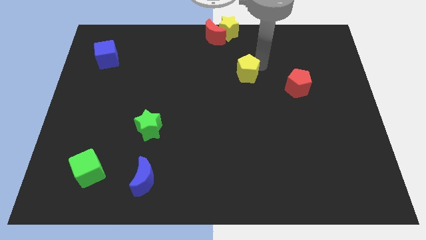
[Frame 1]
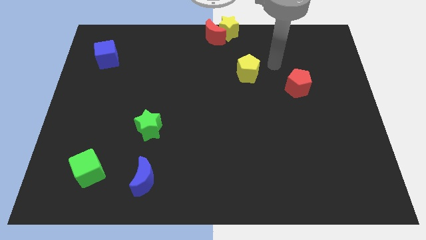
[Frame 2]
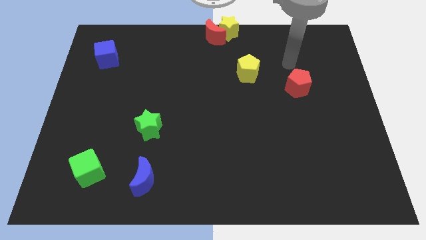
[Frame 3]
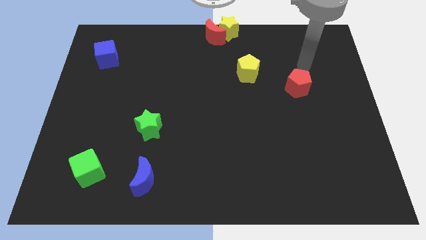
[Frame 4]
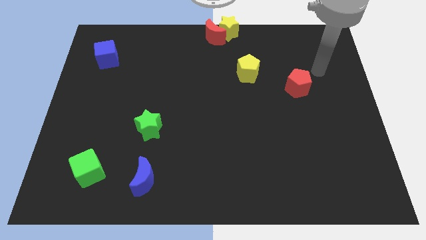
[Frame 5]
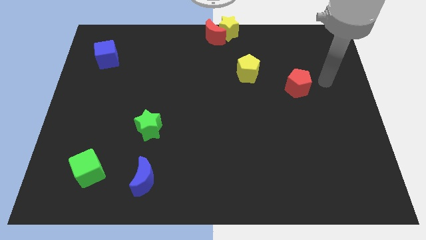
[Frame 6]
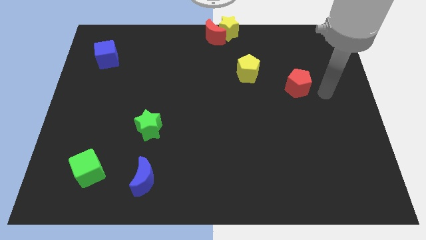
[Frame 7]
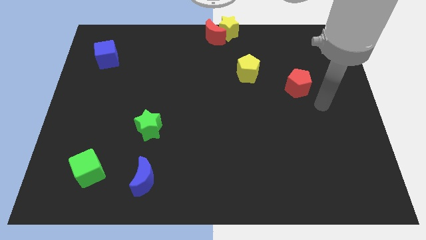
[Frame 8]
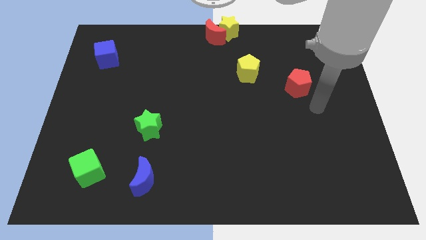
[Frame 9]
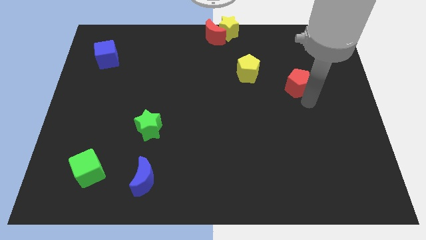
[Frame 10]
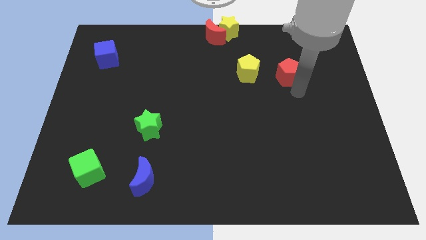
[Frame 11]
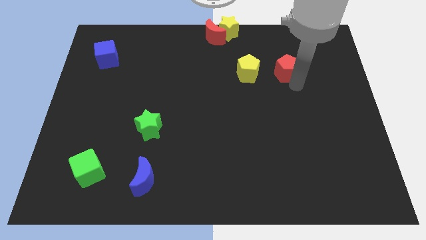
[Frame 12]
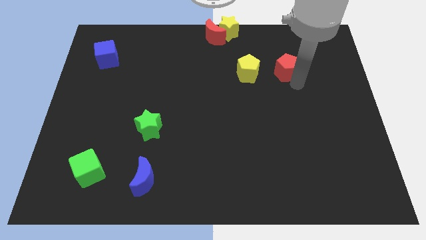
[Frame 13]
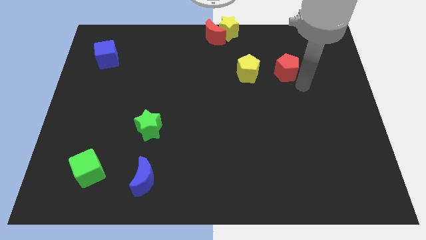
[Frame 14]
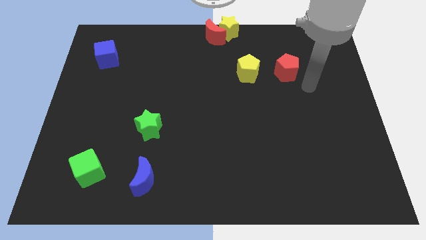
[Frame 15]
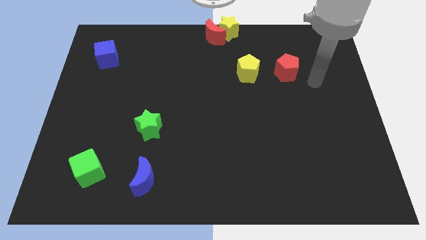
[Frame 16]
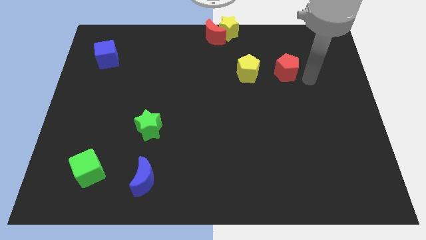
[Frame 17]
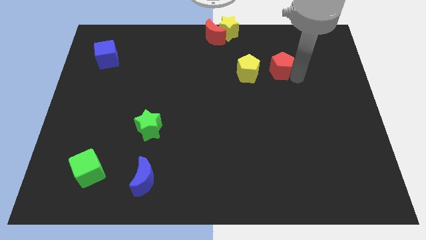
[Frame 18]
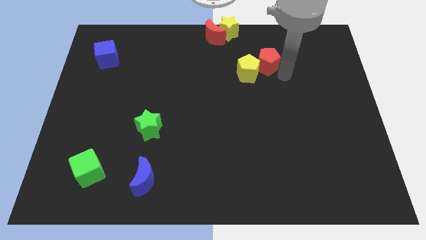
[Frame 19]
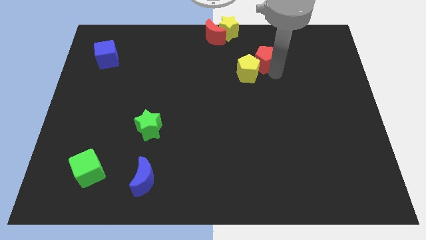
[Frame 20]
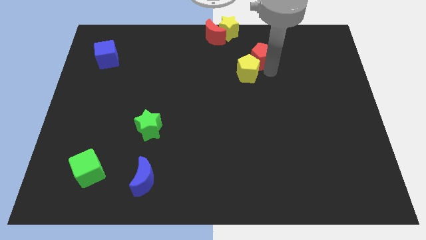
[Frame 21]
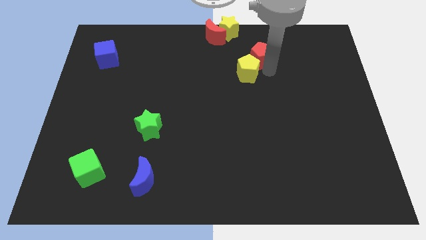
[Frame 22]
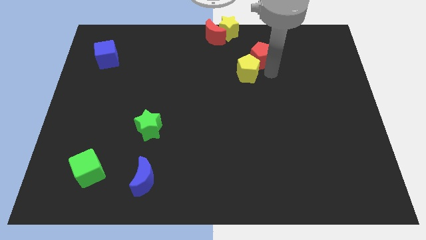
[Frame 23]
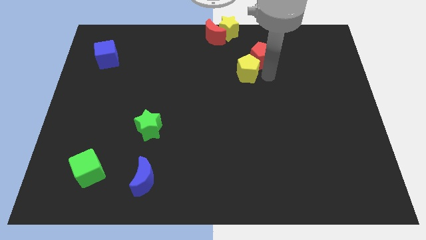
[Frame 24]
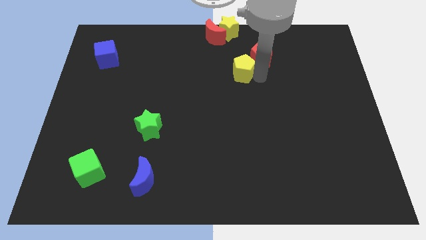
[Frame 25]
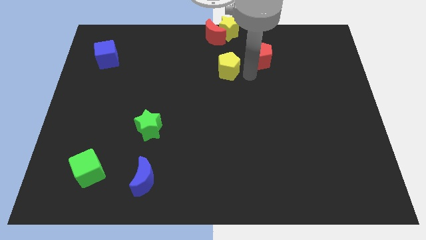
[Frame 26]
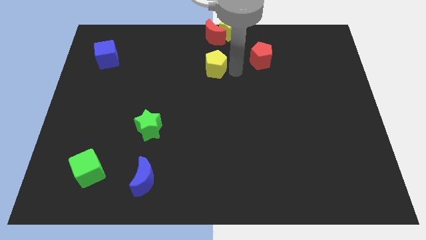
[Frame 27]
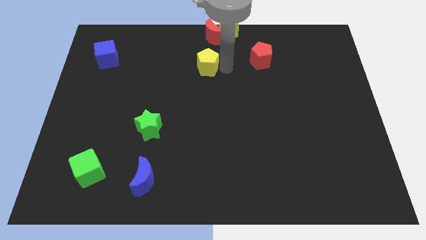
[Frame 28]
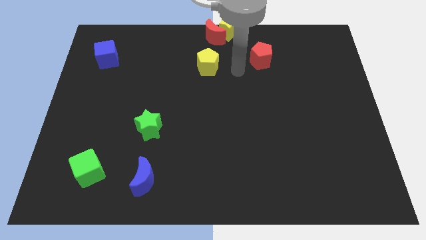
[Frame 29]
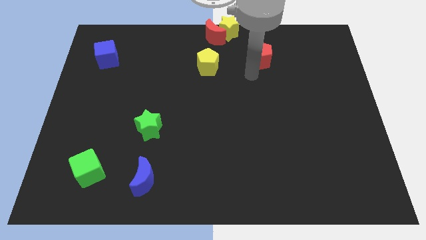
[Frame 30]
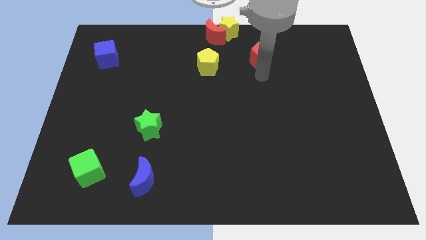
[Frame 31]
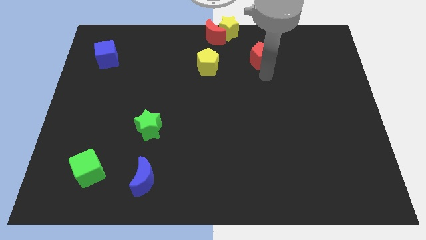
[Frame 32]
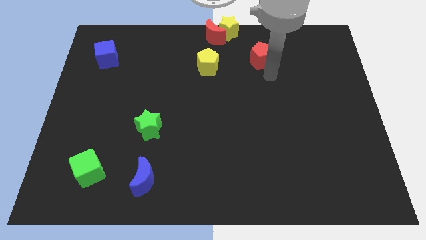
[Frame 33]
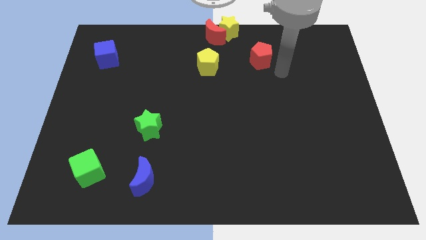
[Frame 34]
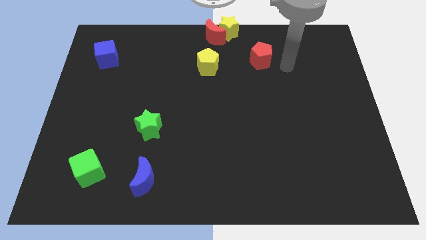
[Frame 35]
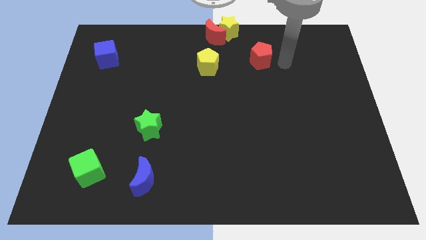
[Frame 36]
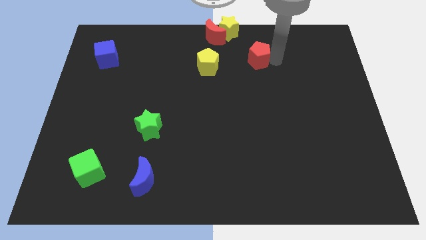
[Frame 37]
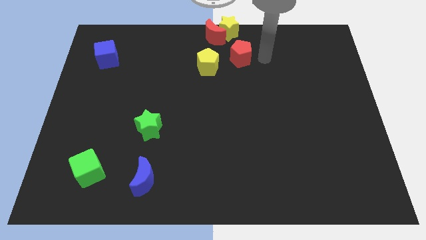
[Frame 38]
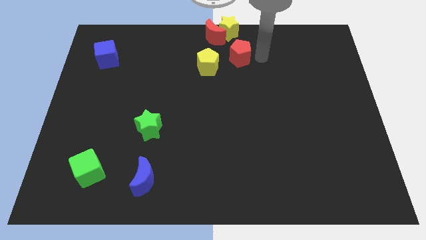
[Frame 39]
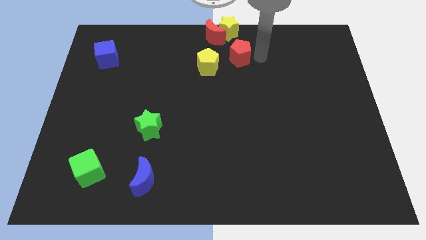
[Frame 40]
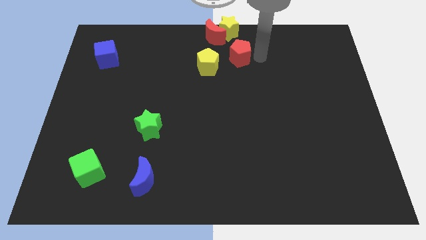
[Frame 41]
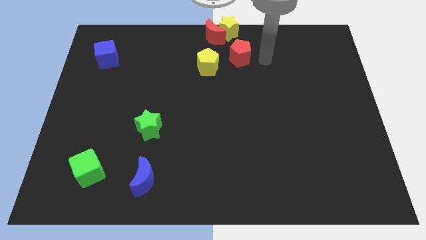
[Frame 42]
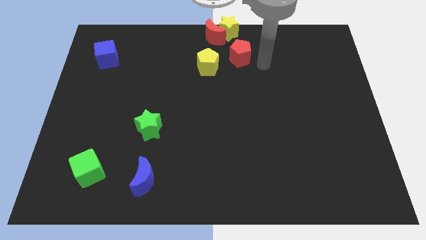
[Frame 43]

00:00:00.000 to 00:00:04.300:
move red pentagon diagonally top right to the yellow pentagon

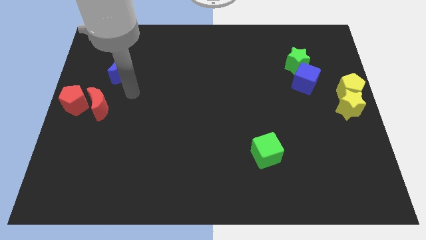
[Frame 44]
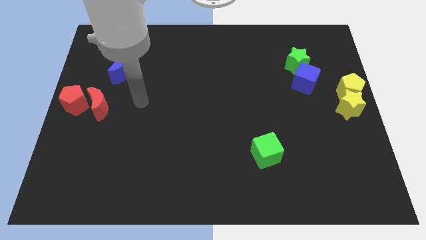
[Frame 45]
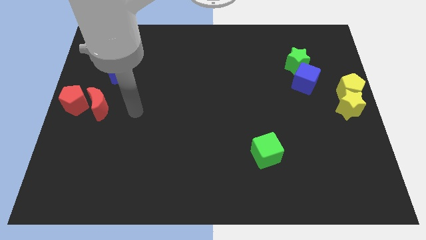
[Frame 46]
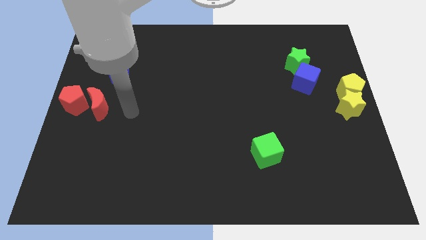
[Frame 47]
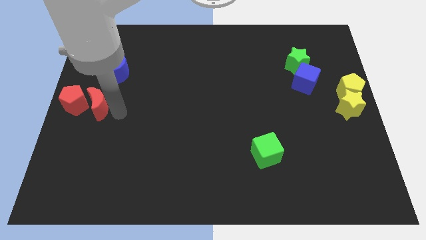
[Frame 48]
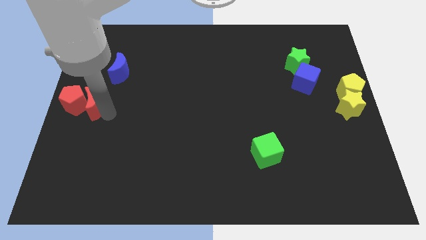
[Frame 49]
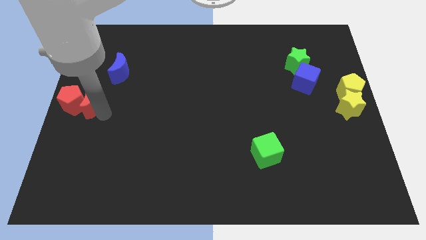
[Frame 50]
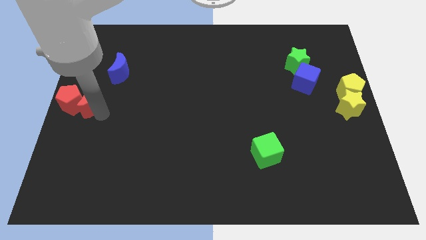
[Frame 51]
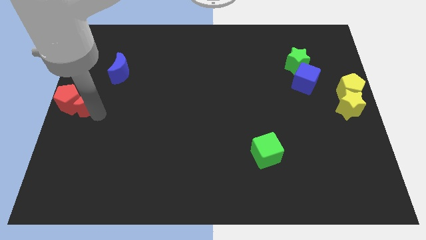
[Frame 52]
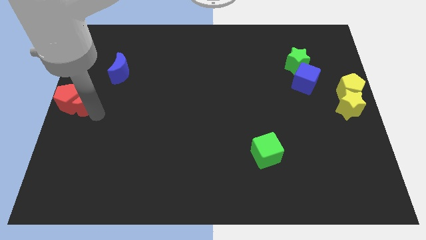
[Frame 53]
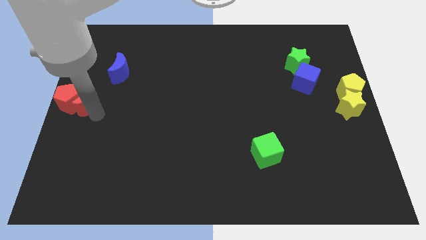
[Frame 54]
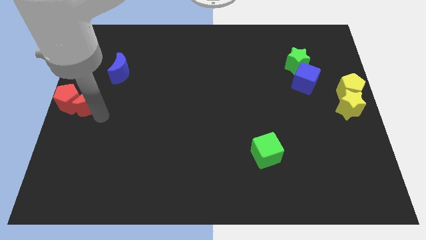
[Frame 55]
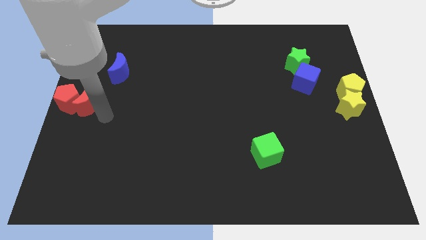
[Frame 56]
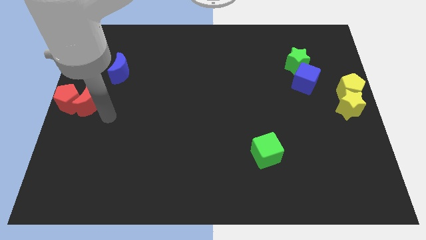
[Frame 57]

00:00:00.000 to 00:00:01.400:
push the red crescent into red pentagon

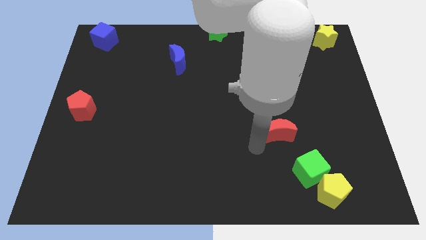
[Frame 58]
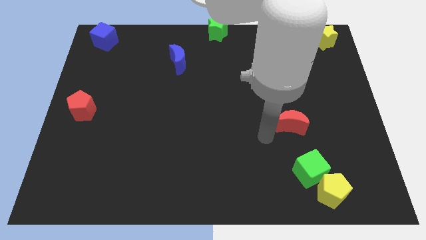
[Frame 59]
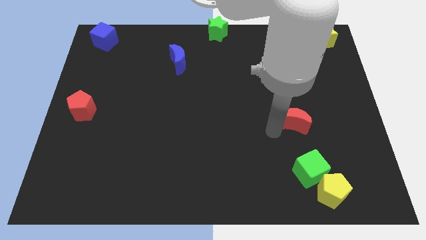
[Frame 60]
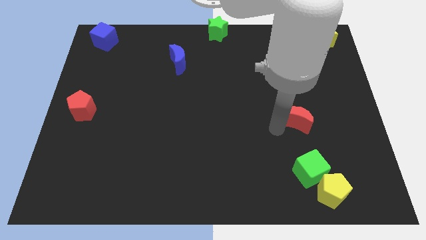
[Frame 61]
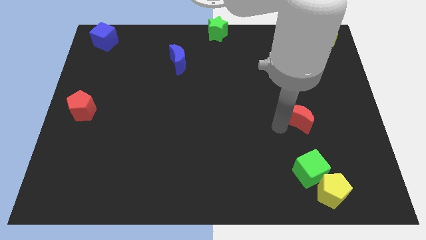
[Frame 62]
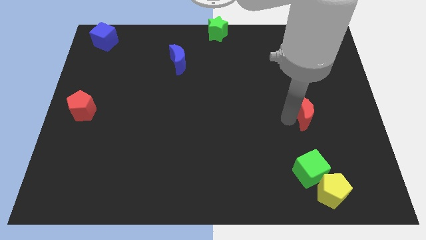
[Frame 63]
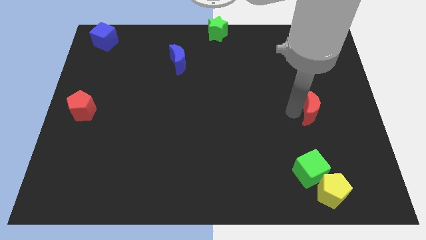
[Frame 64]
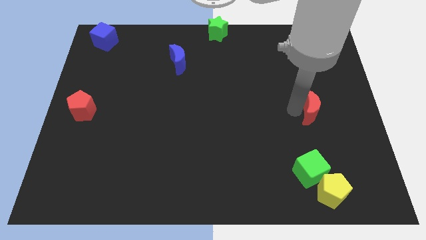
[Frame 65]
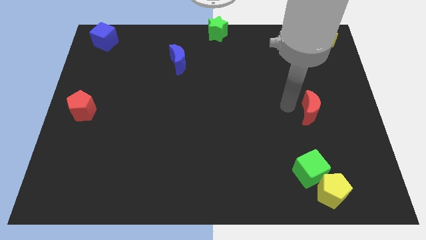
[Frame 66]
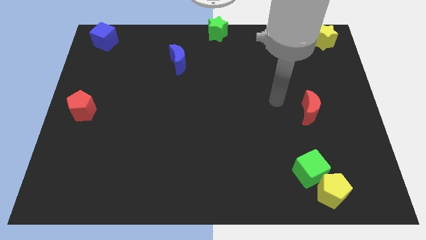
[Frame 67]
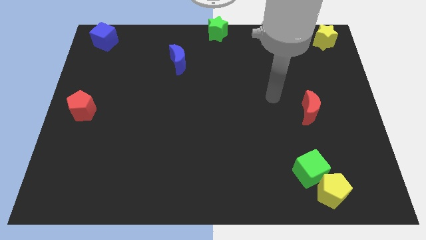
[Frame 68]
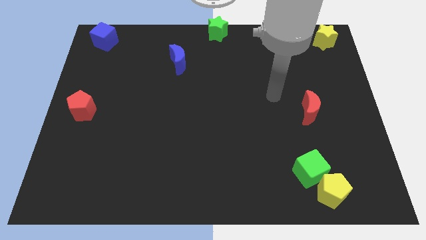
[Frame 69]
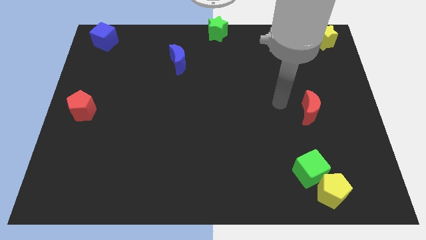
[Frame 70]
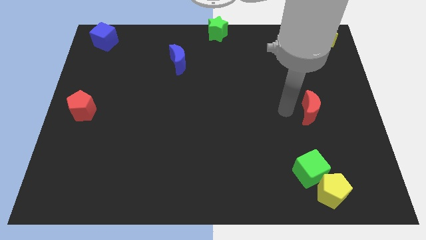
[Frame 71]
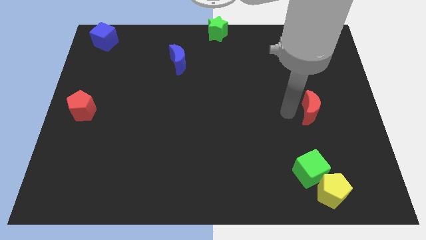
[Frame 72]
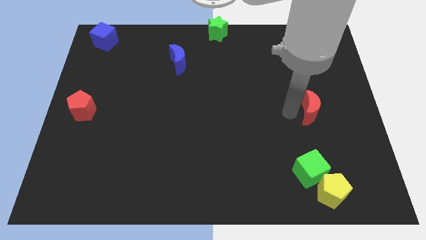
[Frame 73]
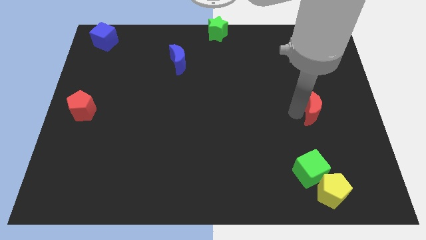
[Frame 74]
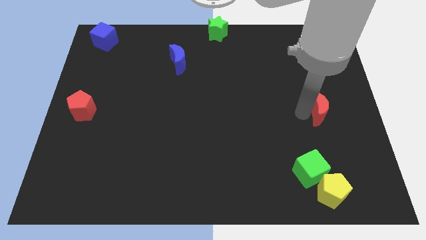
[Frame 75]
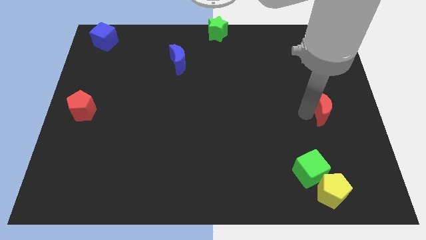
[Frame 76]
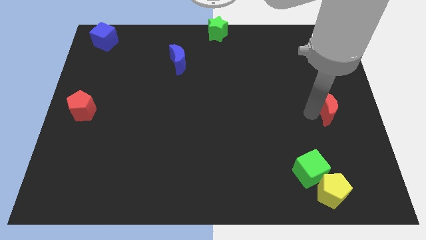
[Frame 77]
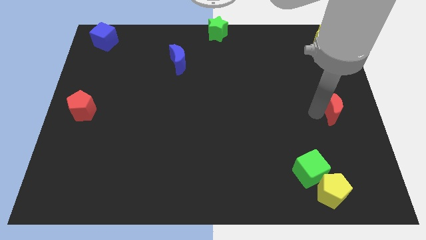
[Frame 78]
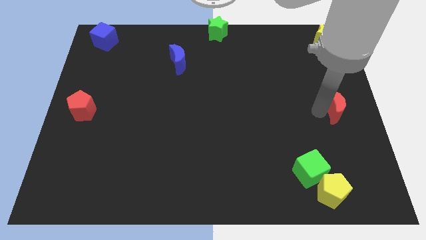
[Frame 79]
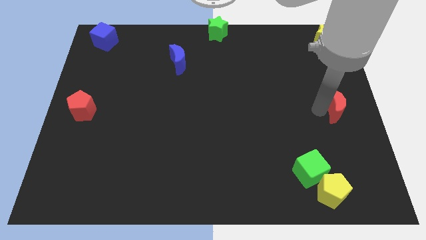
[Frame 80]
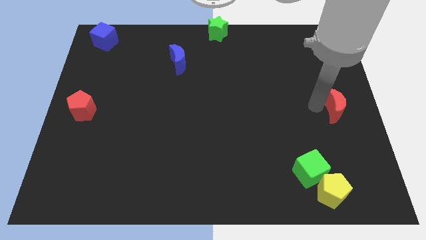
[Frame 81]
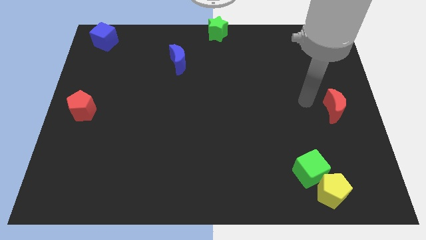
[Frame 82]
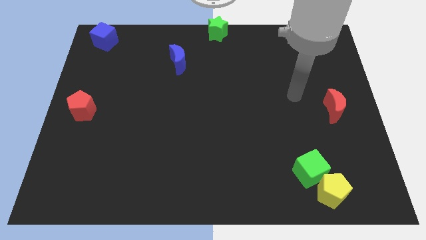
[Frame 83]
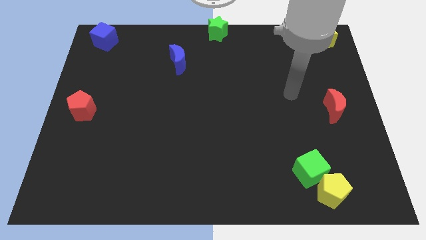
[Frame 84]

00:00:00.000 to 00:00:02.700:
push red crescent towards right

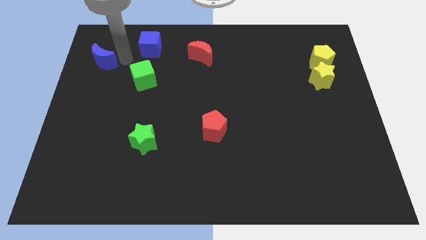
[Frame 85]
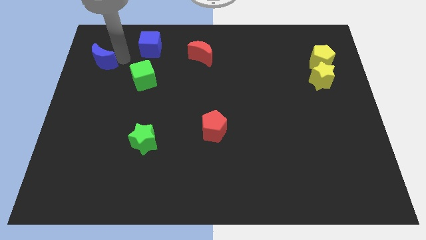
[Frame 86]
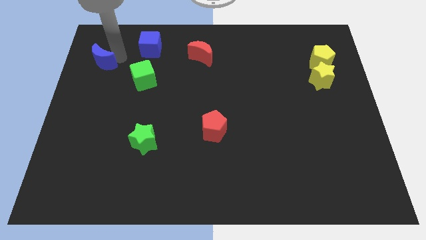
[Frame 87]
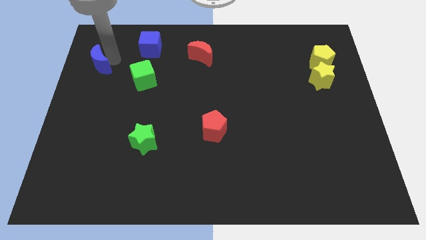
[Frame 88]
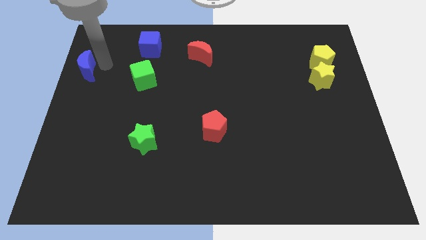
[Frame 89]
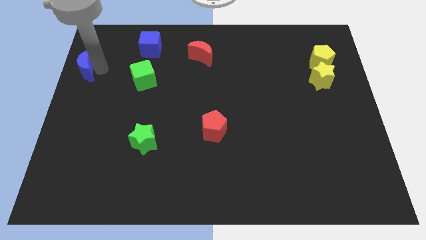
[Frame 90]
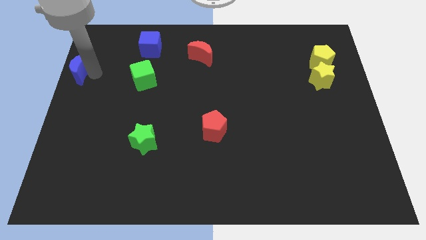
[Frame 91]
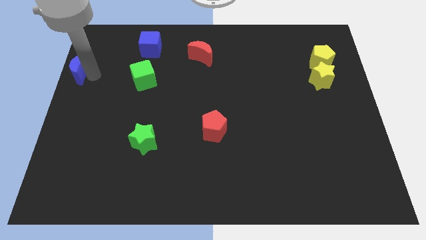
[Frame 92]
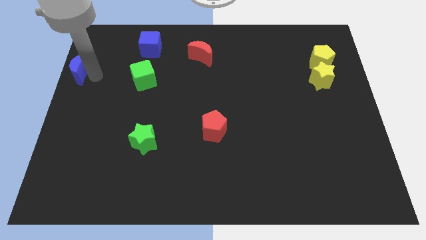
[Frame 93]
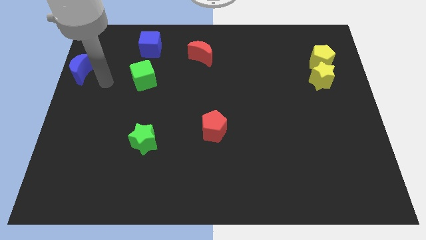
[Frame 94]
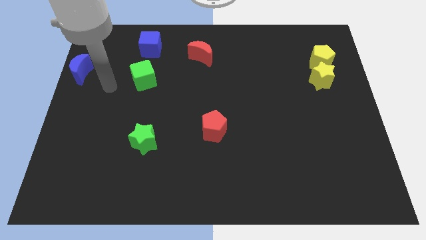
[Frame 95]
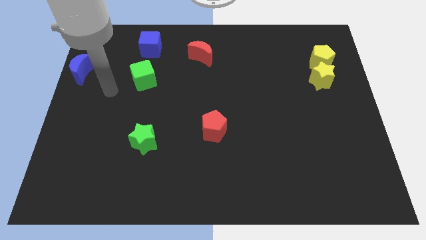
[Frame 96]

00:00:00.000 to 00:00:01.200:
move the blue crescent slightly to the left side of the board
